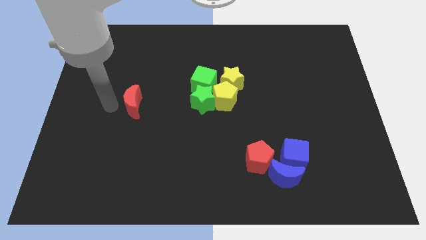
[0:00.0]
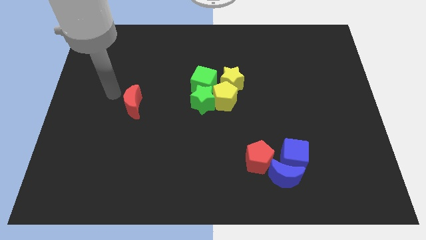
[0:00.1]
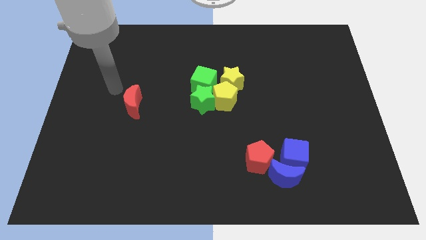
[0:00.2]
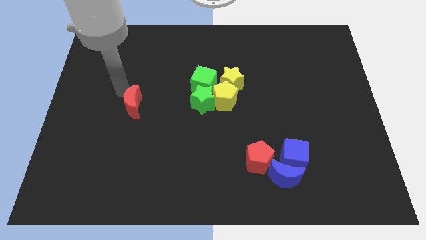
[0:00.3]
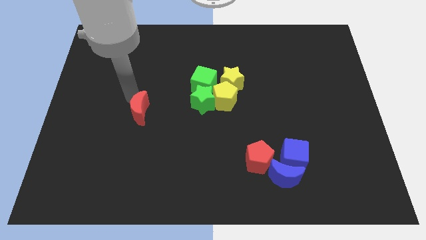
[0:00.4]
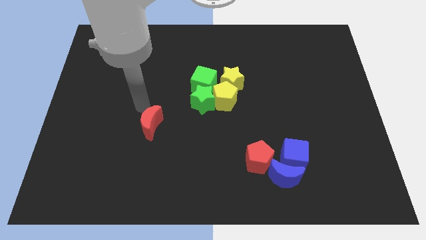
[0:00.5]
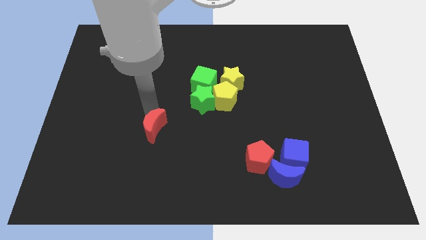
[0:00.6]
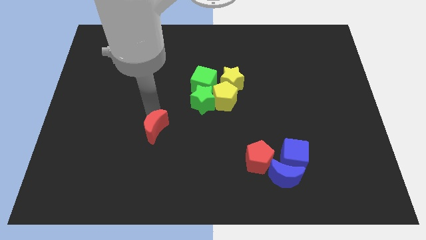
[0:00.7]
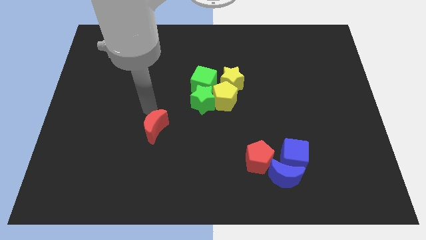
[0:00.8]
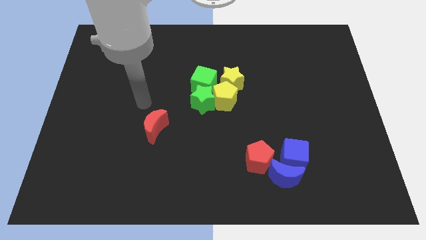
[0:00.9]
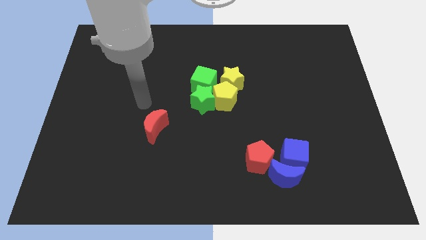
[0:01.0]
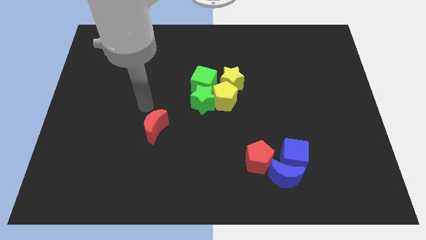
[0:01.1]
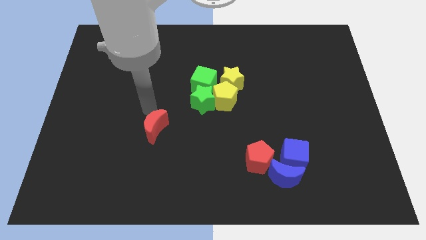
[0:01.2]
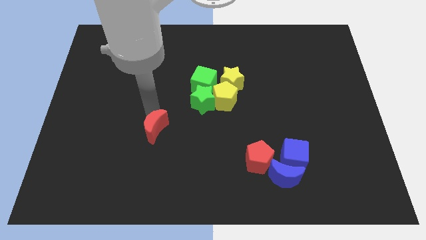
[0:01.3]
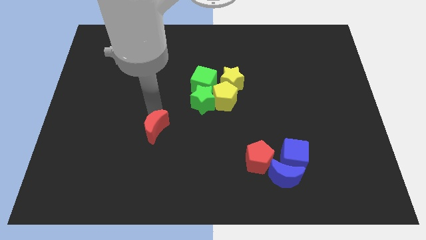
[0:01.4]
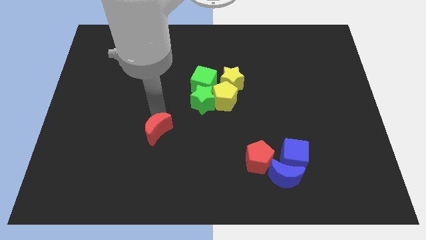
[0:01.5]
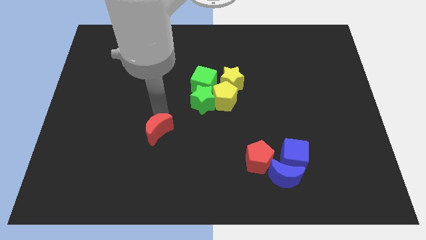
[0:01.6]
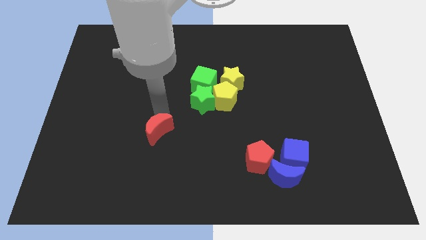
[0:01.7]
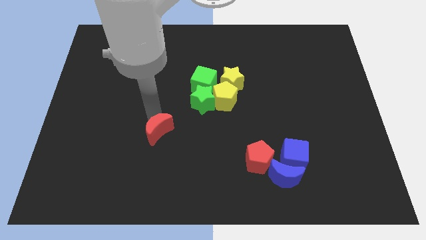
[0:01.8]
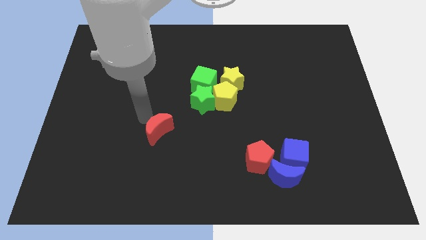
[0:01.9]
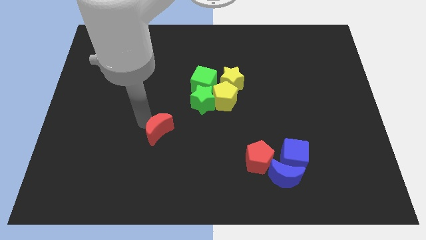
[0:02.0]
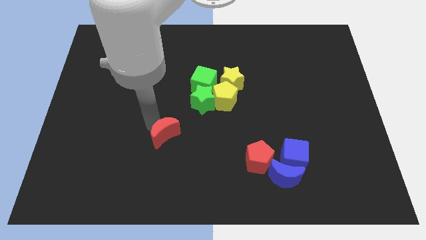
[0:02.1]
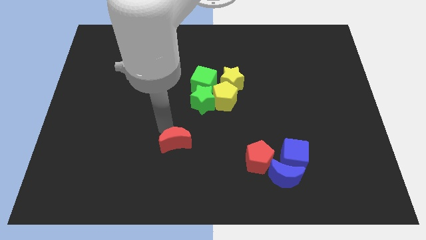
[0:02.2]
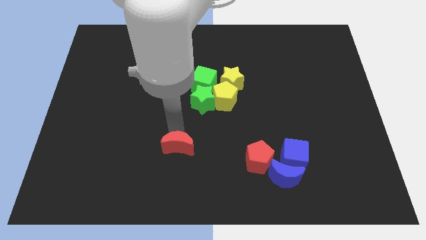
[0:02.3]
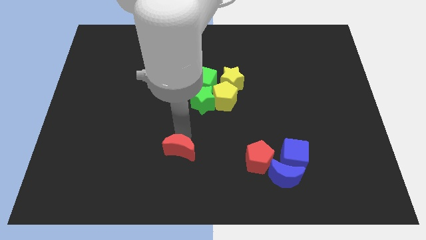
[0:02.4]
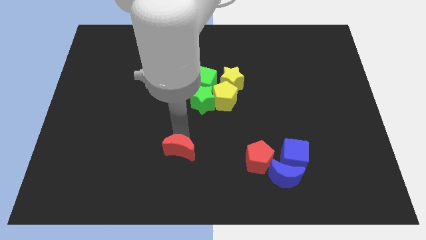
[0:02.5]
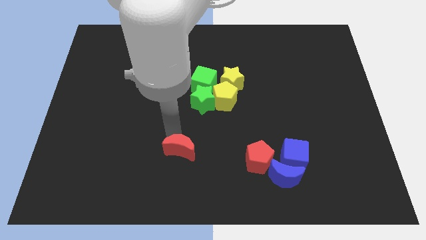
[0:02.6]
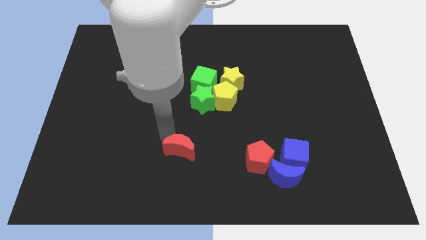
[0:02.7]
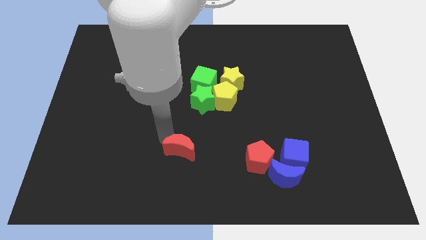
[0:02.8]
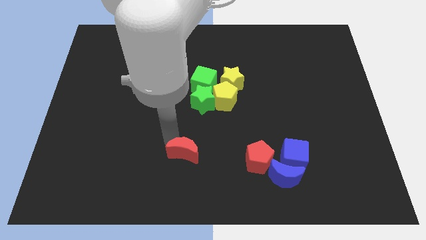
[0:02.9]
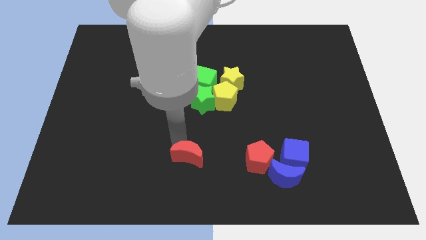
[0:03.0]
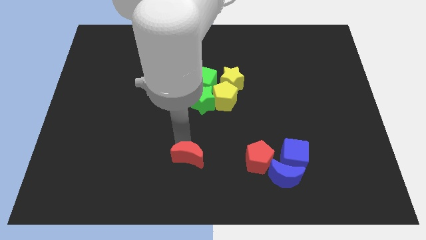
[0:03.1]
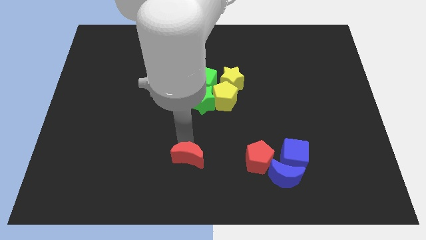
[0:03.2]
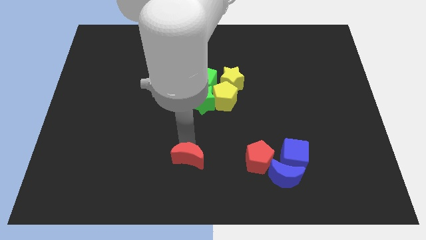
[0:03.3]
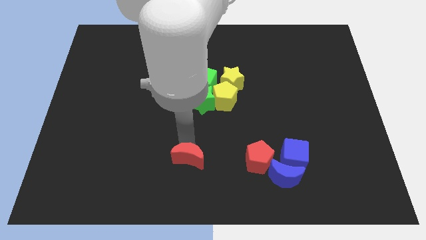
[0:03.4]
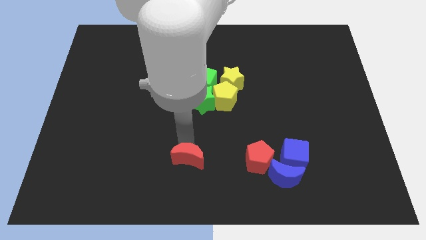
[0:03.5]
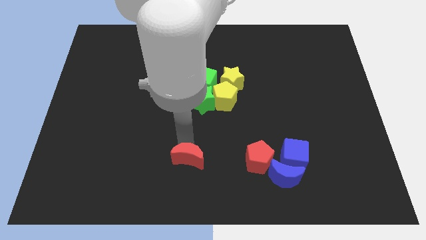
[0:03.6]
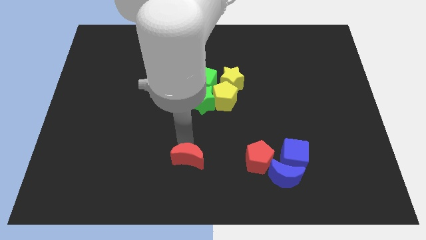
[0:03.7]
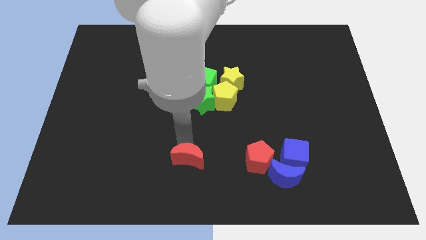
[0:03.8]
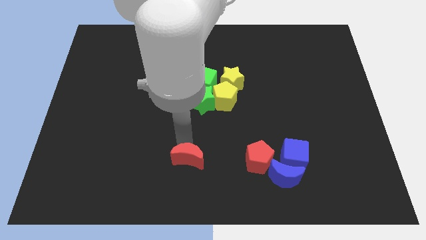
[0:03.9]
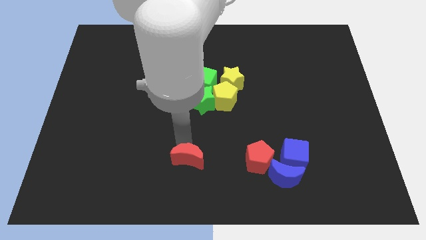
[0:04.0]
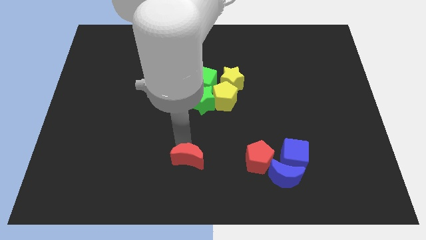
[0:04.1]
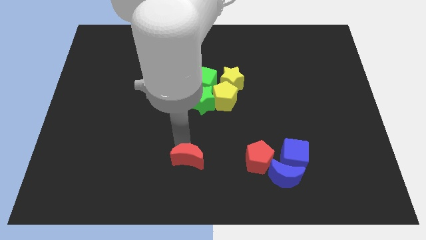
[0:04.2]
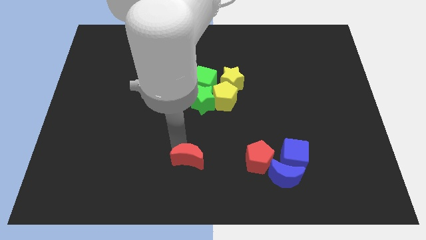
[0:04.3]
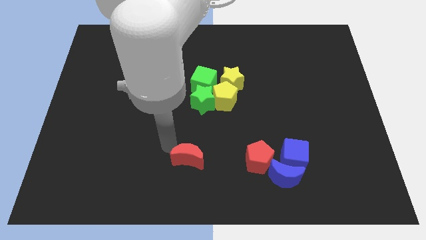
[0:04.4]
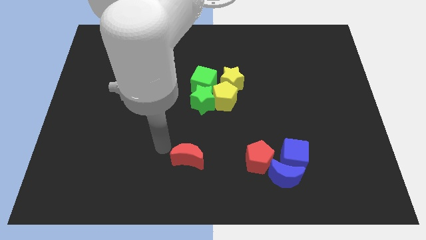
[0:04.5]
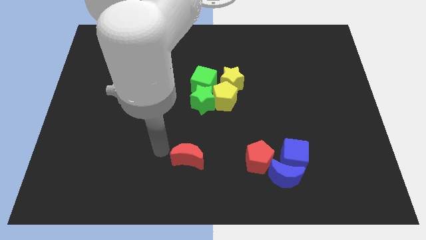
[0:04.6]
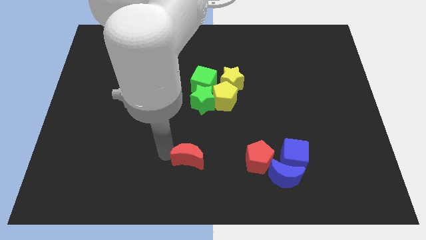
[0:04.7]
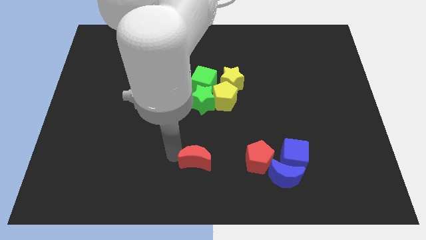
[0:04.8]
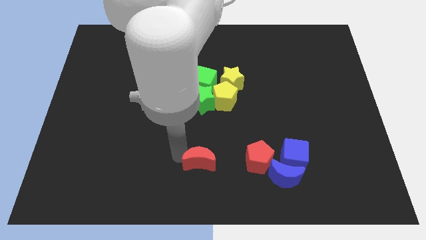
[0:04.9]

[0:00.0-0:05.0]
slide the red moon vertically below the green star

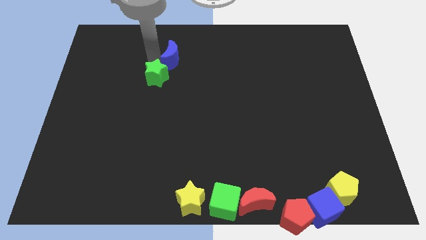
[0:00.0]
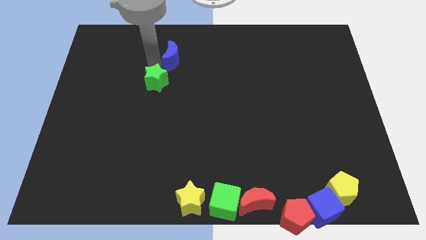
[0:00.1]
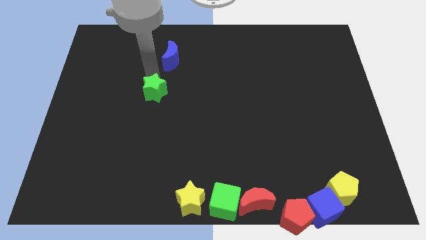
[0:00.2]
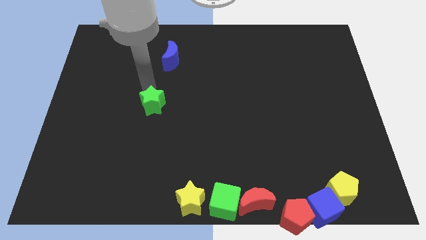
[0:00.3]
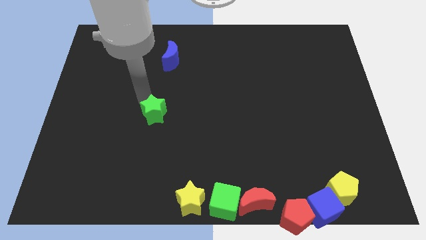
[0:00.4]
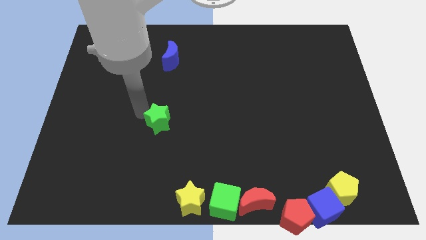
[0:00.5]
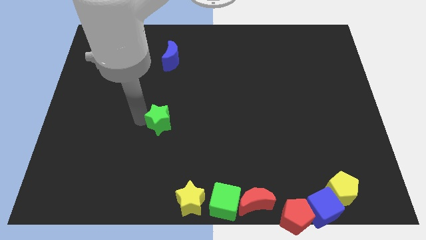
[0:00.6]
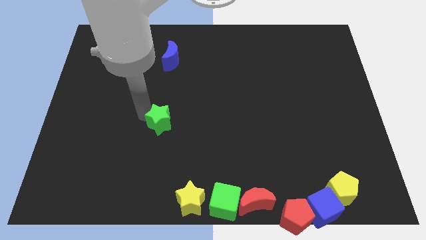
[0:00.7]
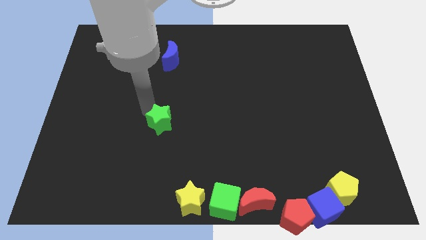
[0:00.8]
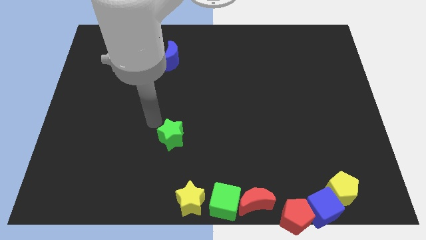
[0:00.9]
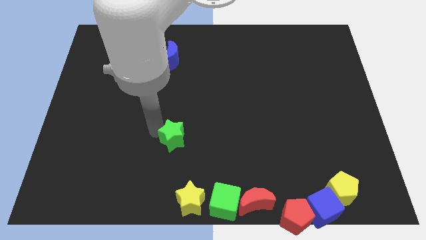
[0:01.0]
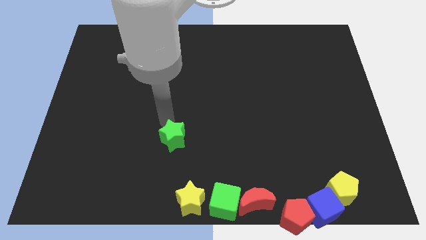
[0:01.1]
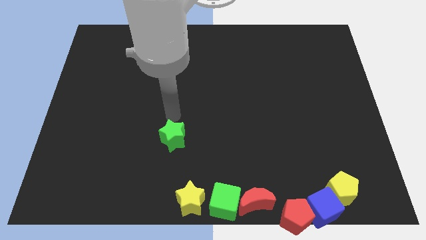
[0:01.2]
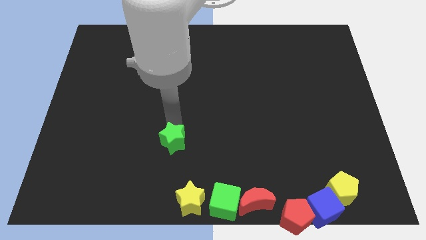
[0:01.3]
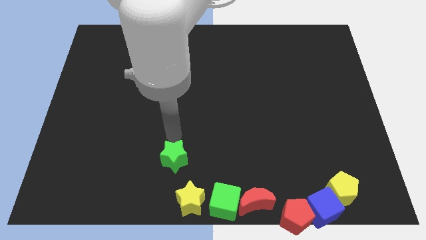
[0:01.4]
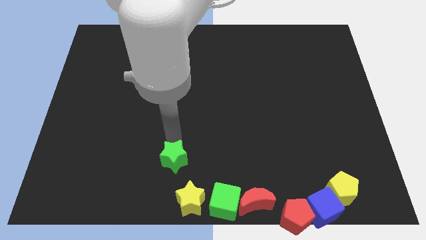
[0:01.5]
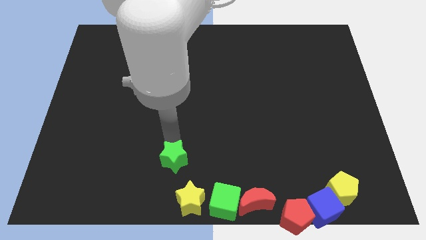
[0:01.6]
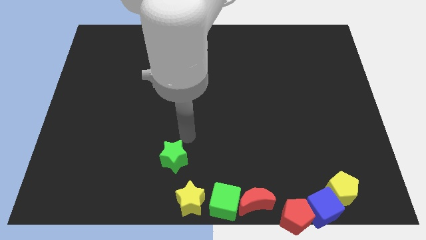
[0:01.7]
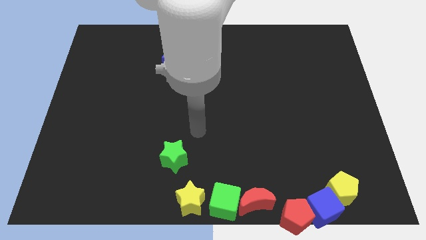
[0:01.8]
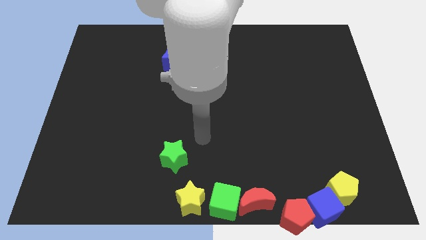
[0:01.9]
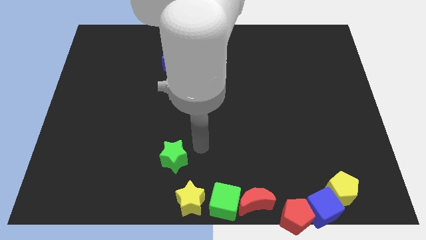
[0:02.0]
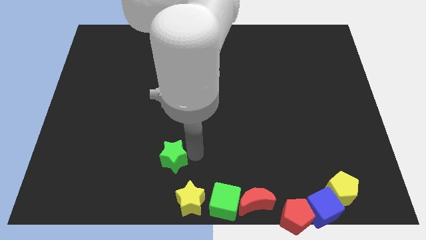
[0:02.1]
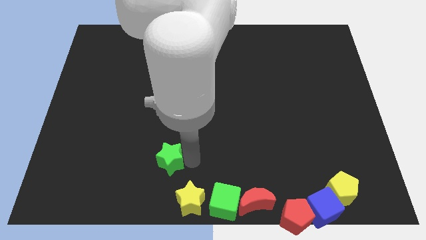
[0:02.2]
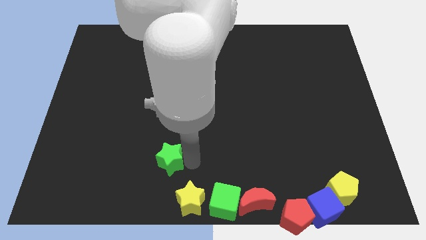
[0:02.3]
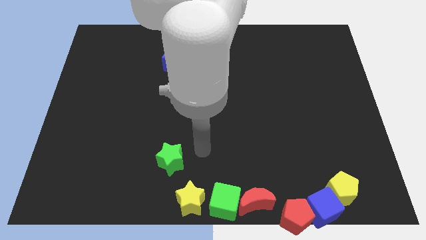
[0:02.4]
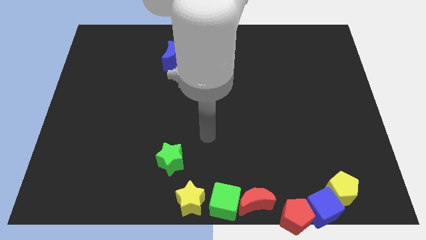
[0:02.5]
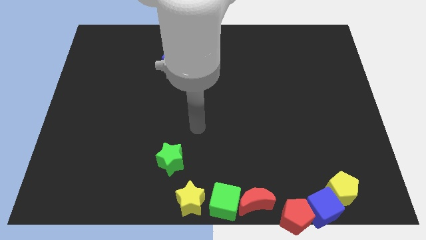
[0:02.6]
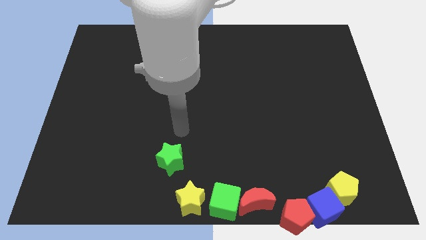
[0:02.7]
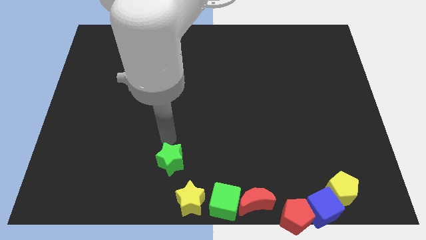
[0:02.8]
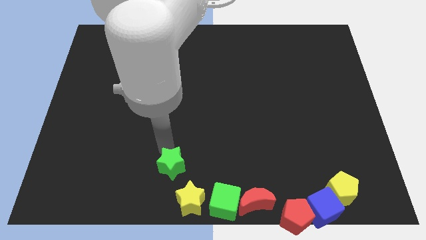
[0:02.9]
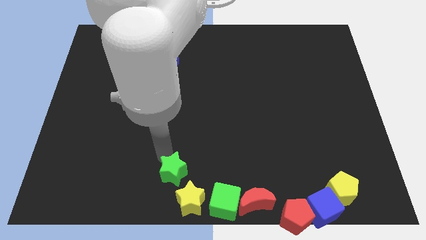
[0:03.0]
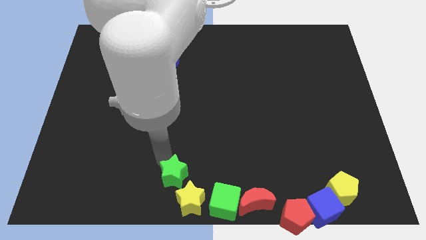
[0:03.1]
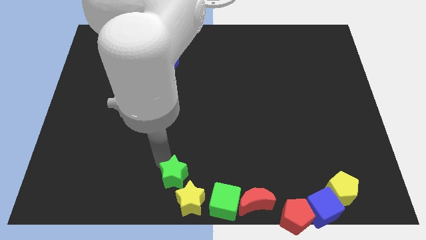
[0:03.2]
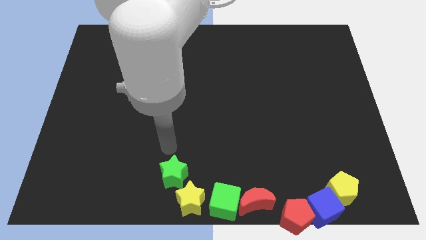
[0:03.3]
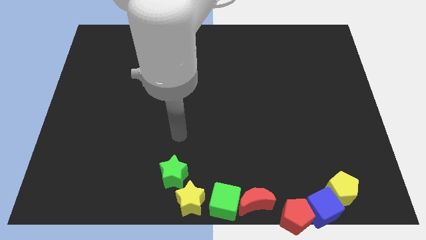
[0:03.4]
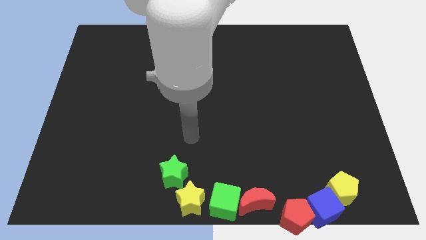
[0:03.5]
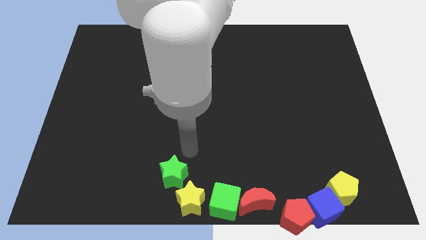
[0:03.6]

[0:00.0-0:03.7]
place the green star on the top of the yellow star

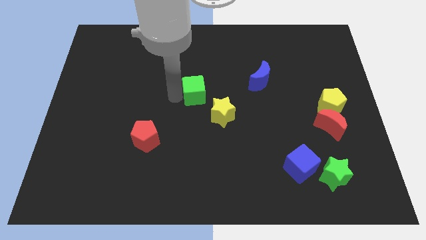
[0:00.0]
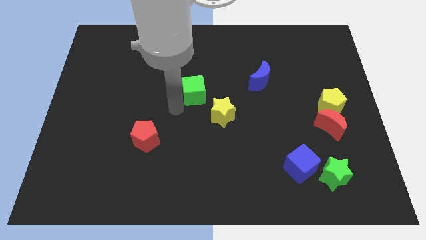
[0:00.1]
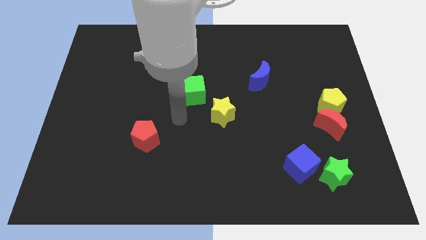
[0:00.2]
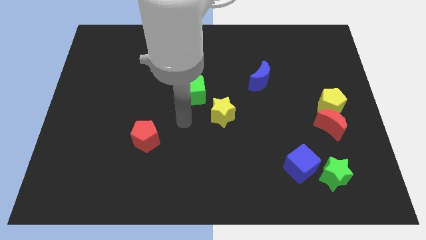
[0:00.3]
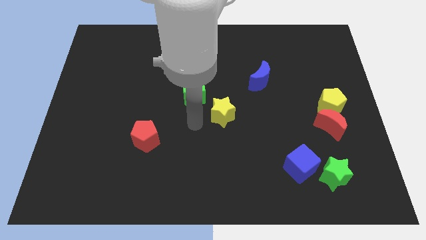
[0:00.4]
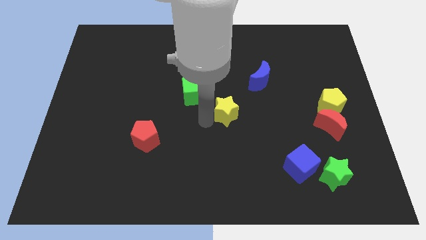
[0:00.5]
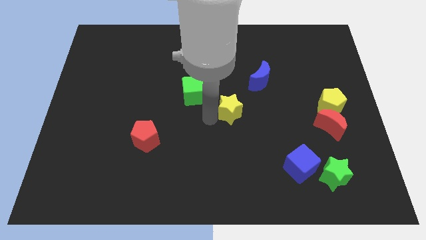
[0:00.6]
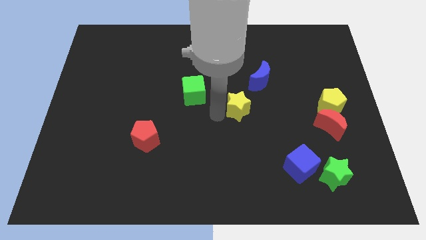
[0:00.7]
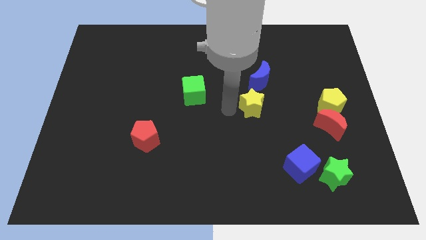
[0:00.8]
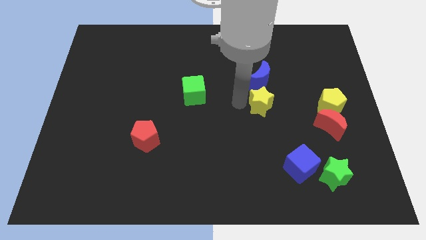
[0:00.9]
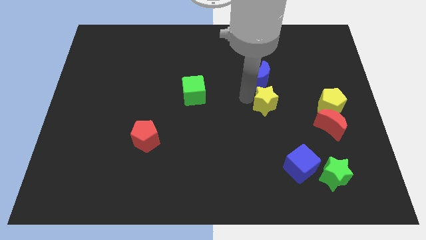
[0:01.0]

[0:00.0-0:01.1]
move the yellow star below the blue crescent
